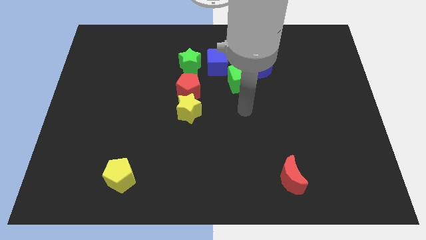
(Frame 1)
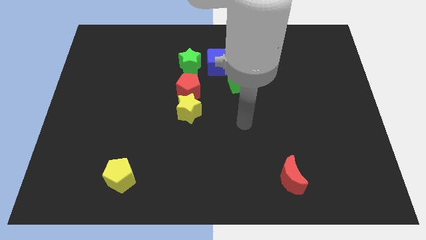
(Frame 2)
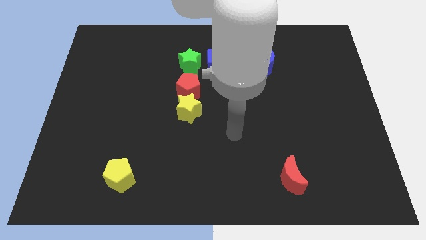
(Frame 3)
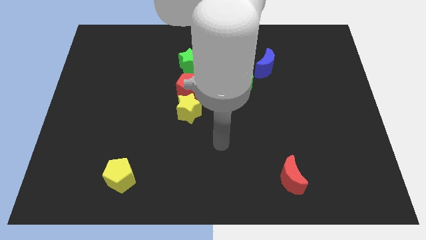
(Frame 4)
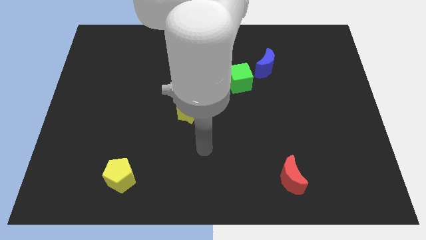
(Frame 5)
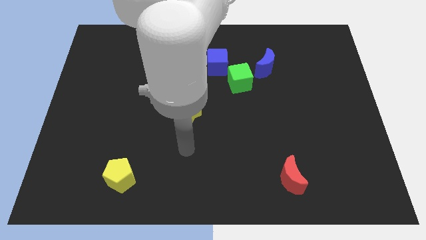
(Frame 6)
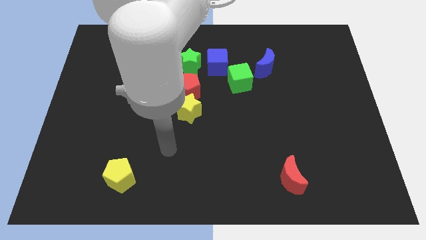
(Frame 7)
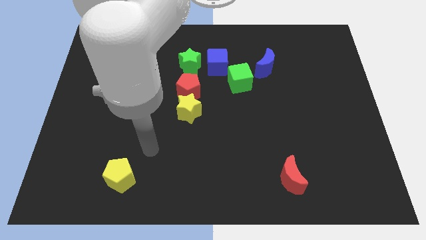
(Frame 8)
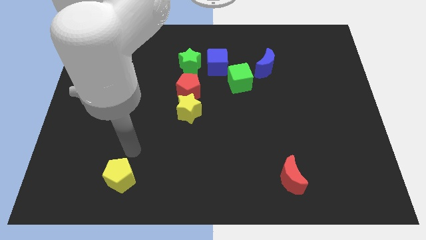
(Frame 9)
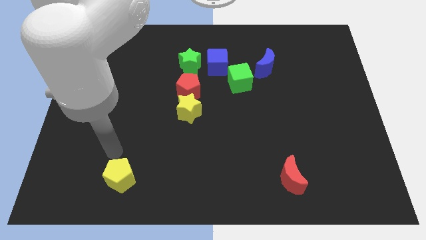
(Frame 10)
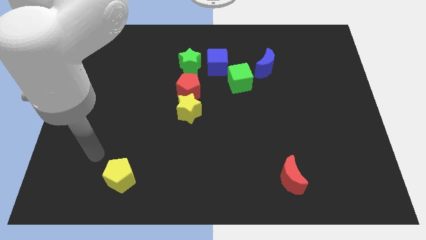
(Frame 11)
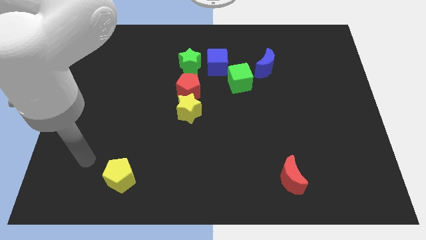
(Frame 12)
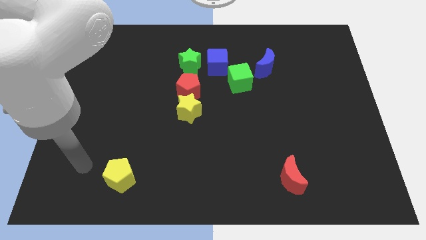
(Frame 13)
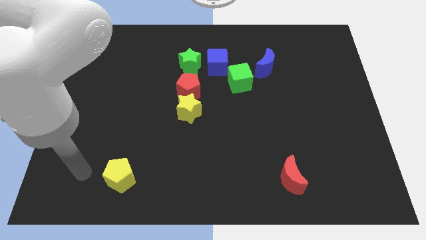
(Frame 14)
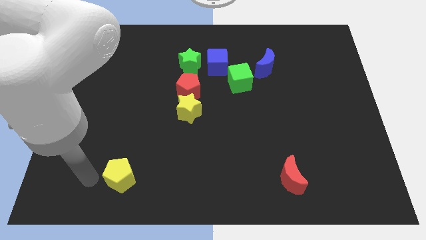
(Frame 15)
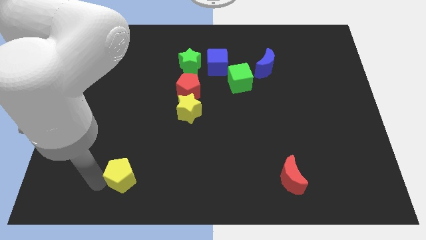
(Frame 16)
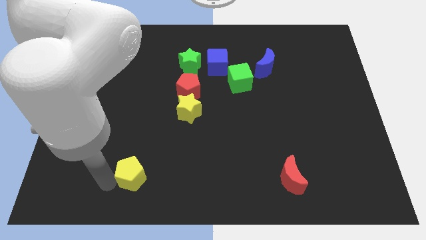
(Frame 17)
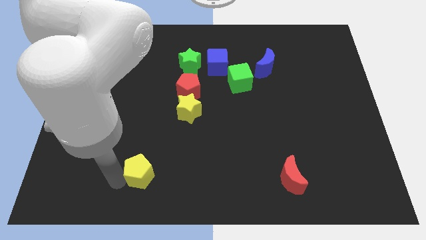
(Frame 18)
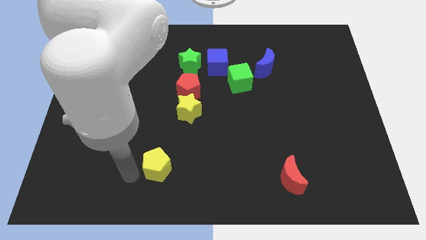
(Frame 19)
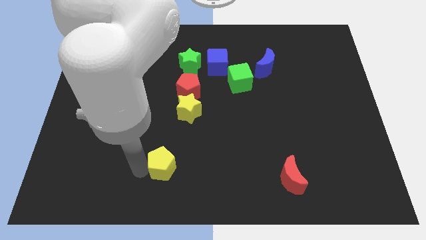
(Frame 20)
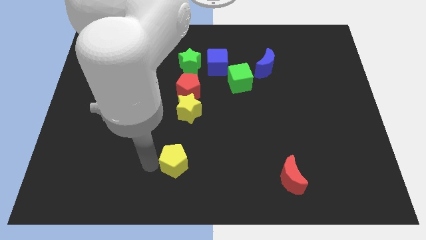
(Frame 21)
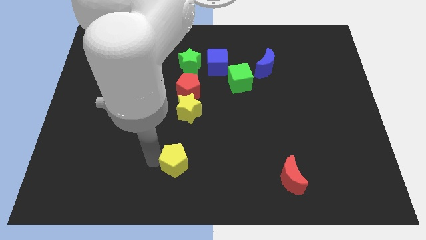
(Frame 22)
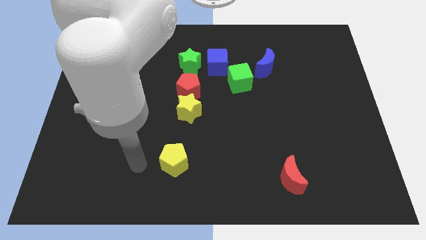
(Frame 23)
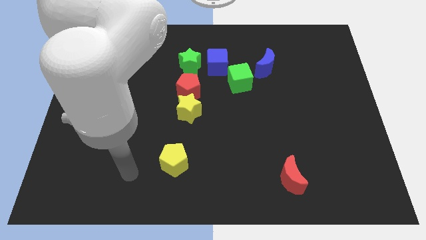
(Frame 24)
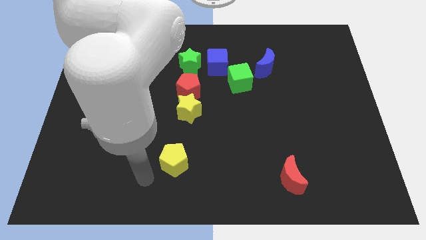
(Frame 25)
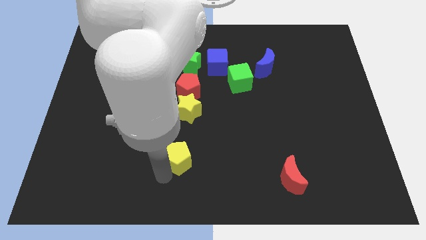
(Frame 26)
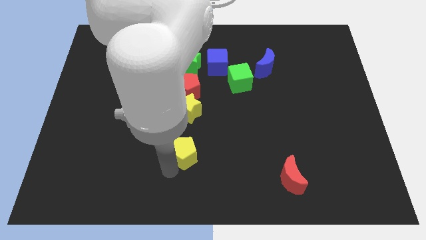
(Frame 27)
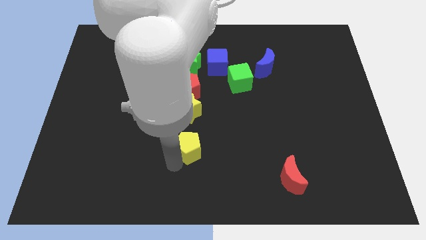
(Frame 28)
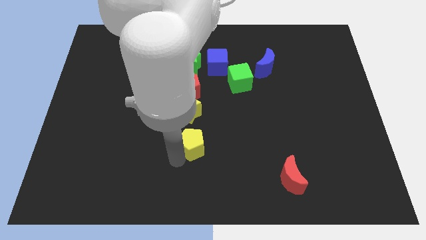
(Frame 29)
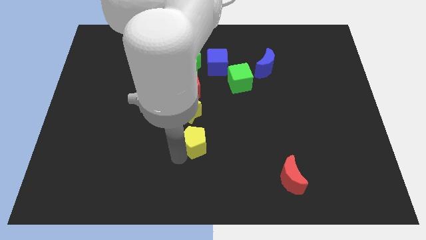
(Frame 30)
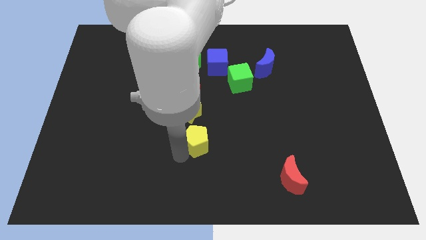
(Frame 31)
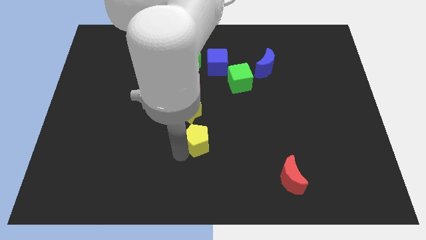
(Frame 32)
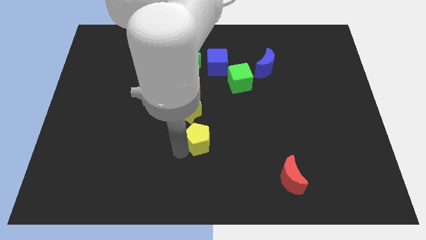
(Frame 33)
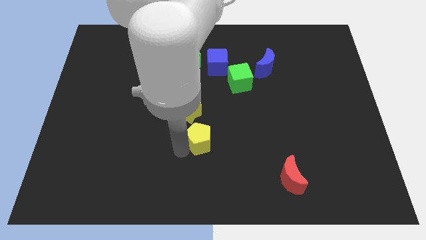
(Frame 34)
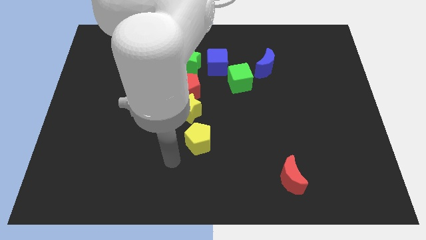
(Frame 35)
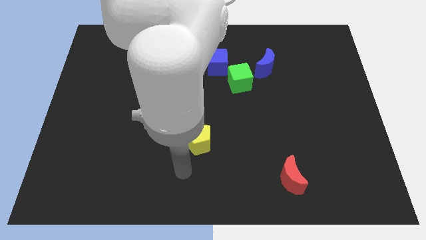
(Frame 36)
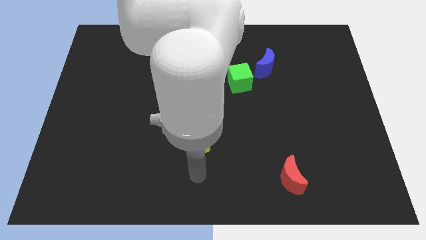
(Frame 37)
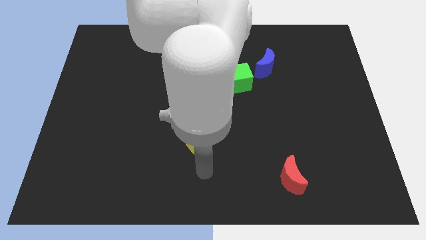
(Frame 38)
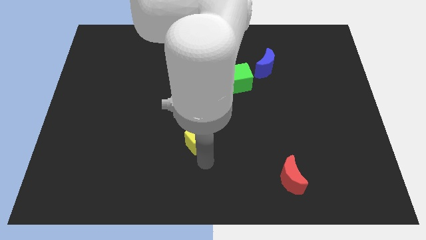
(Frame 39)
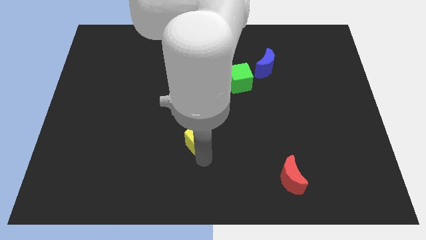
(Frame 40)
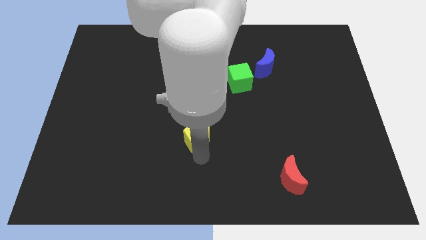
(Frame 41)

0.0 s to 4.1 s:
place yellow pentagon below the yellow star

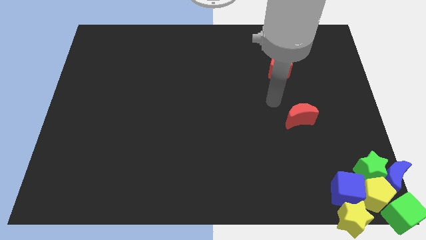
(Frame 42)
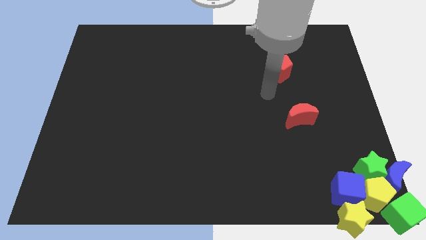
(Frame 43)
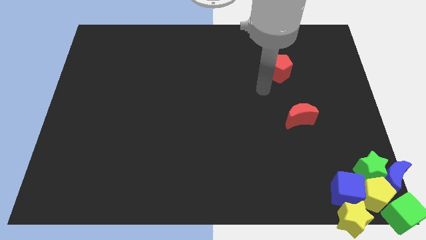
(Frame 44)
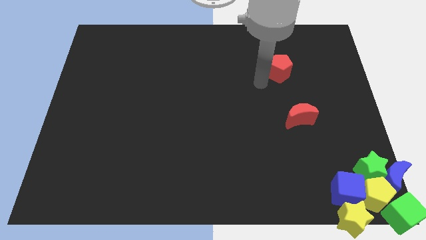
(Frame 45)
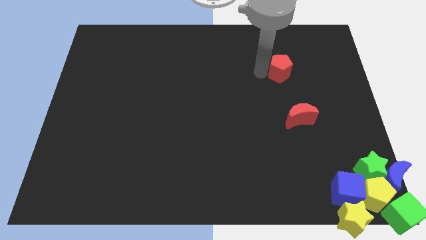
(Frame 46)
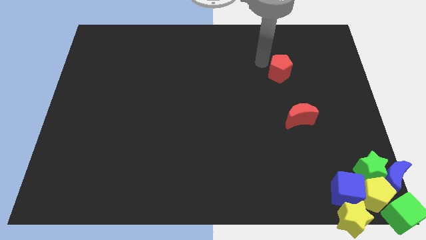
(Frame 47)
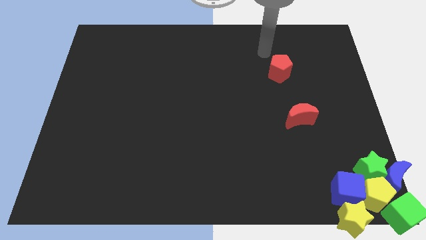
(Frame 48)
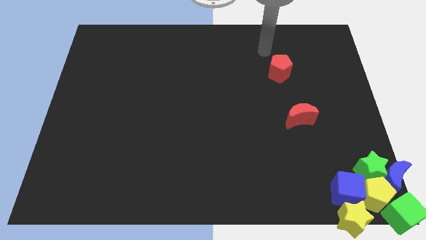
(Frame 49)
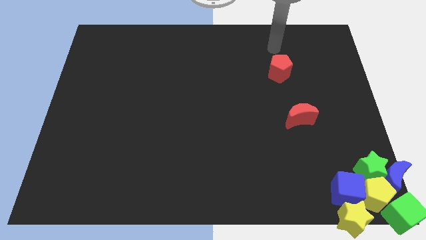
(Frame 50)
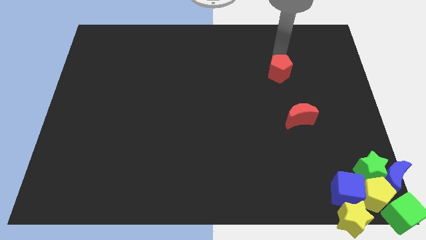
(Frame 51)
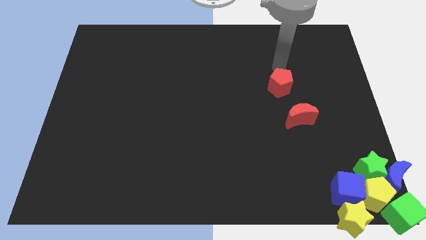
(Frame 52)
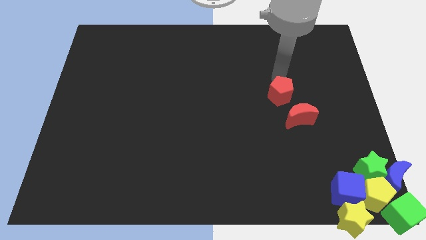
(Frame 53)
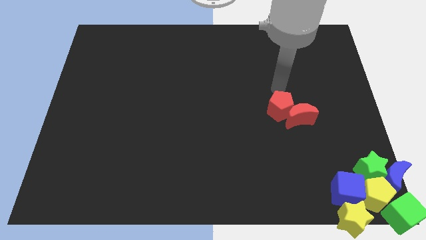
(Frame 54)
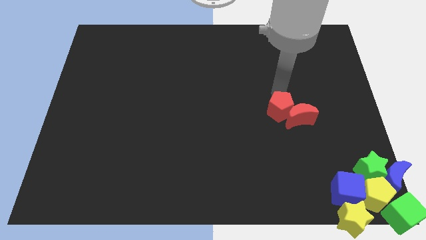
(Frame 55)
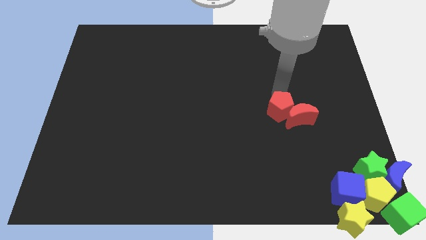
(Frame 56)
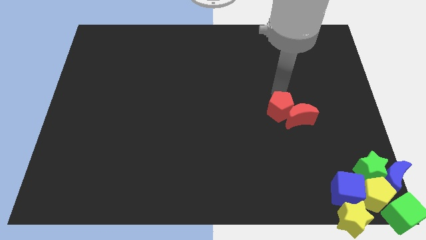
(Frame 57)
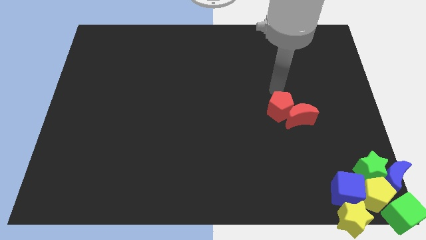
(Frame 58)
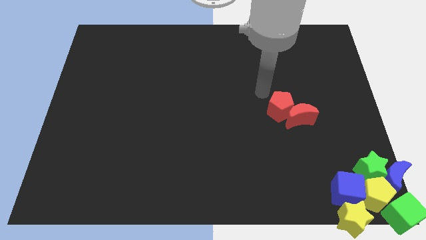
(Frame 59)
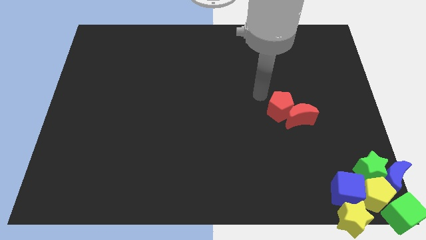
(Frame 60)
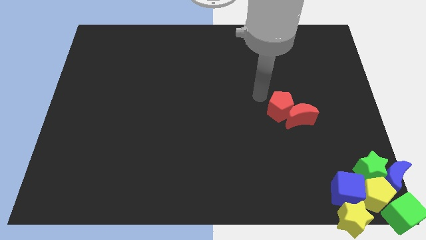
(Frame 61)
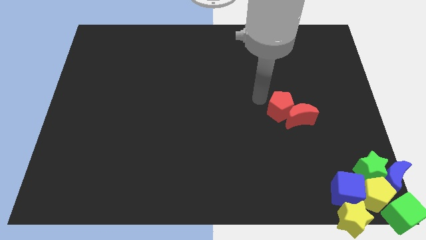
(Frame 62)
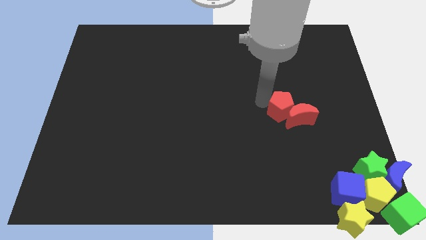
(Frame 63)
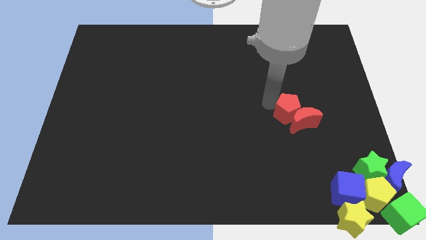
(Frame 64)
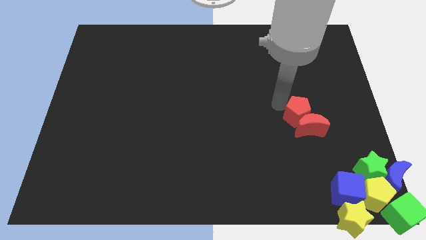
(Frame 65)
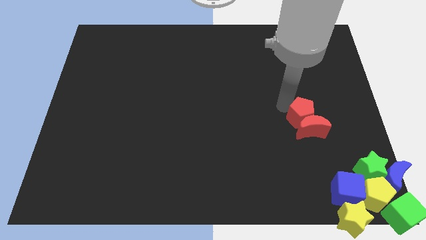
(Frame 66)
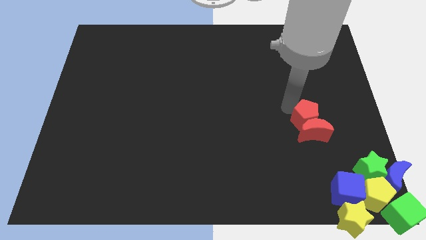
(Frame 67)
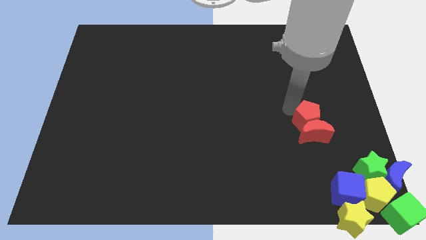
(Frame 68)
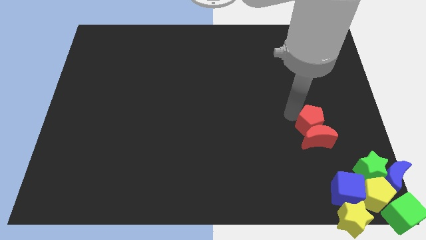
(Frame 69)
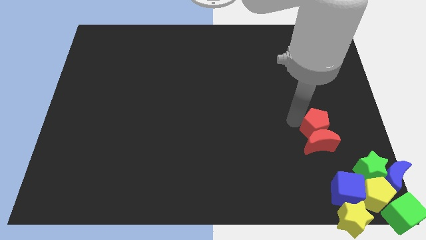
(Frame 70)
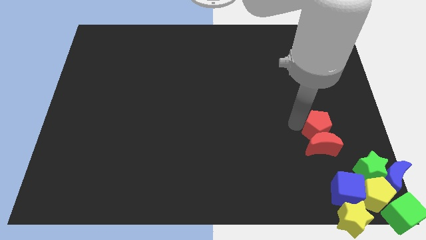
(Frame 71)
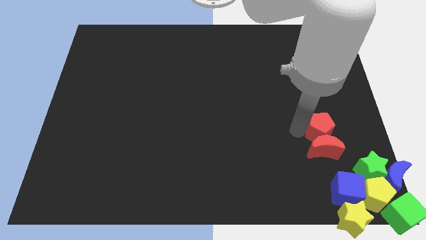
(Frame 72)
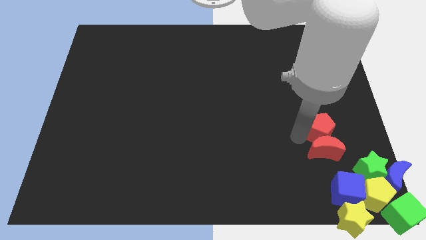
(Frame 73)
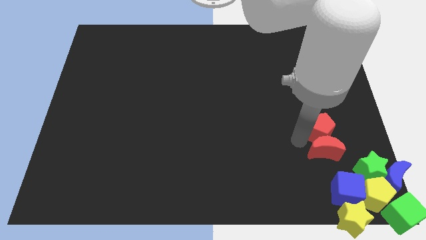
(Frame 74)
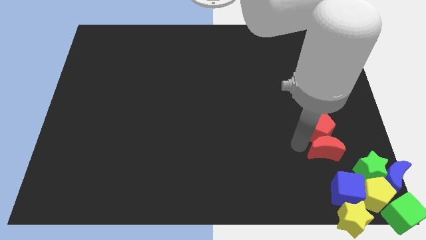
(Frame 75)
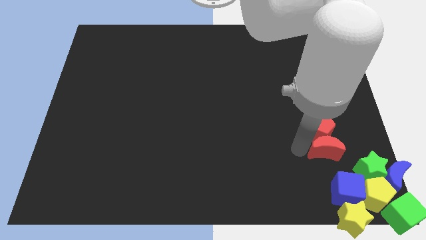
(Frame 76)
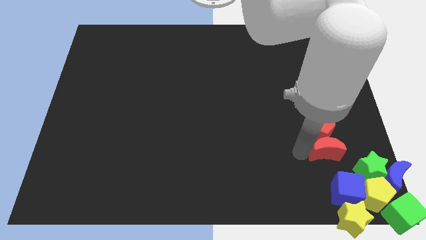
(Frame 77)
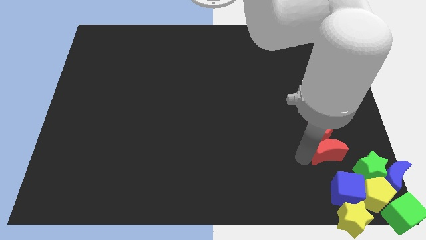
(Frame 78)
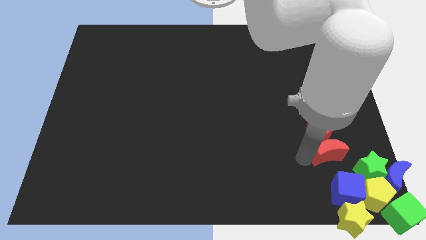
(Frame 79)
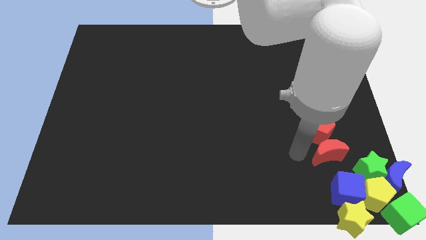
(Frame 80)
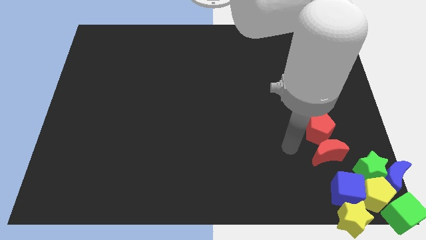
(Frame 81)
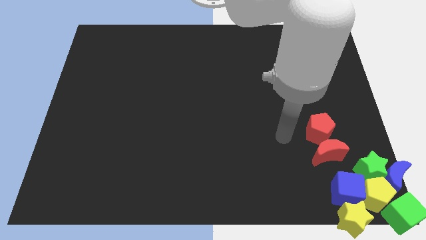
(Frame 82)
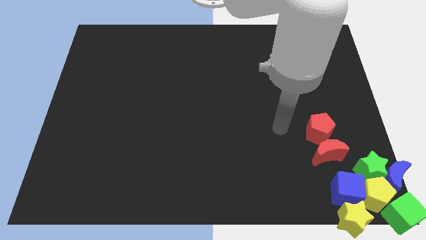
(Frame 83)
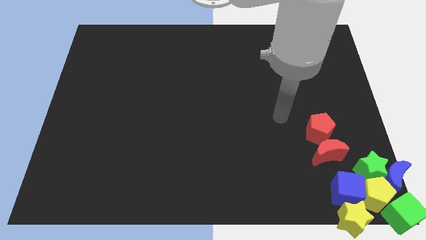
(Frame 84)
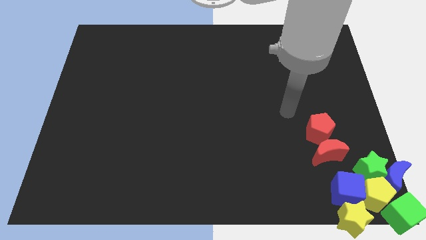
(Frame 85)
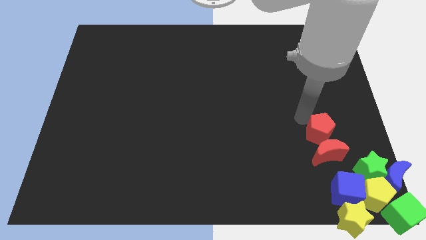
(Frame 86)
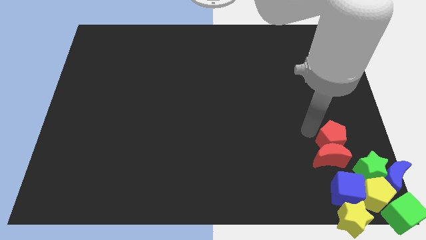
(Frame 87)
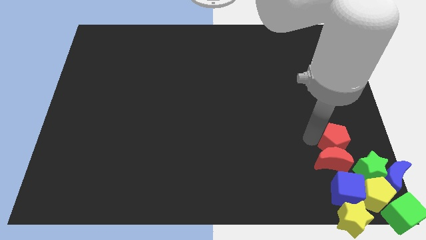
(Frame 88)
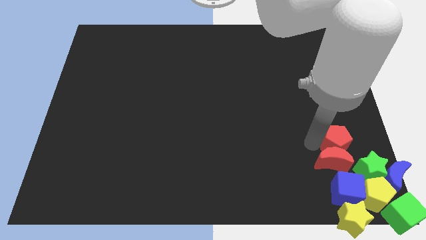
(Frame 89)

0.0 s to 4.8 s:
push the red blocks to the bottom right of the board

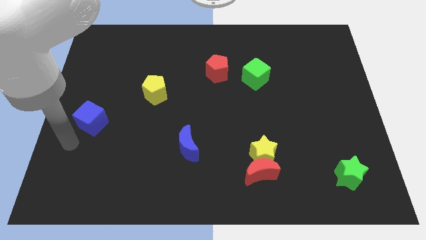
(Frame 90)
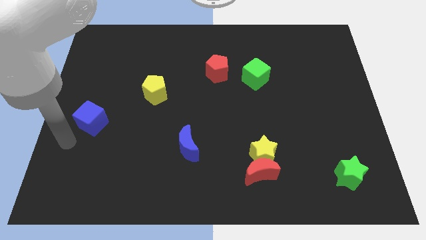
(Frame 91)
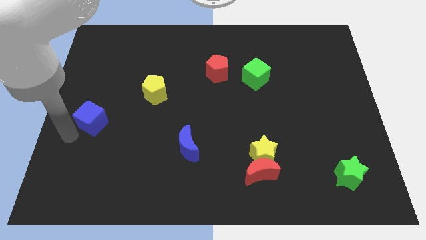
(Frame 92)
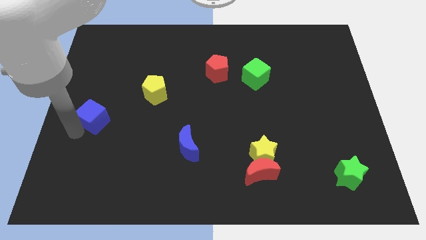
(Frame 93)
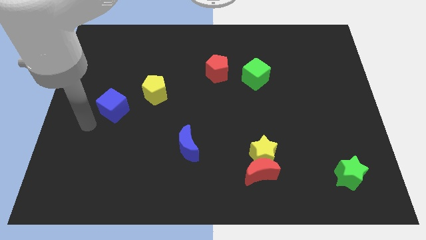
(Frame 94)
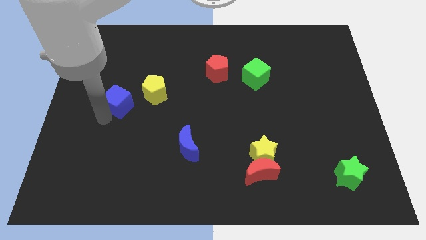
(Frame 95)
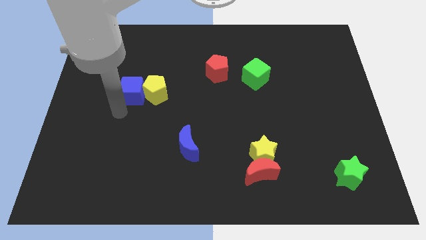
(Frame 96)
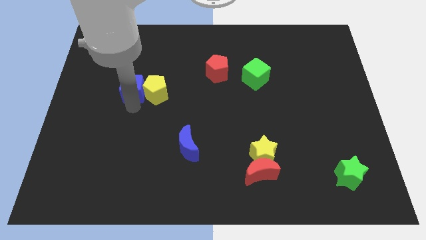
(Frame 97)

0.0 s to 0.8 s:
push the blue cube close to the yellow pentagon
